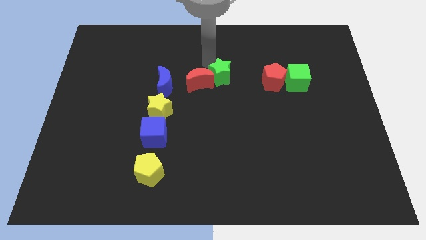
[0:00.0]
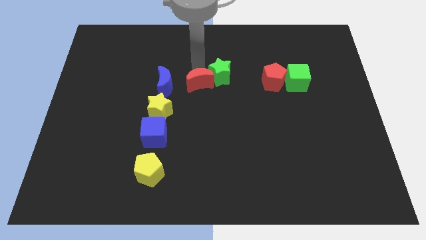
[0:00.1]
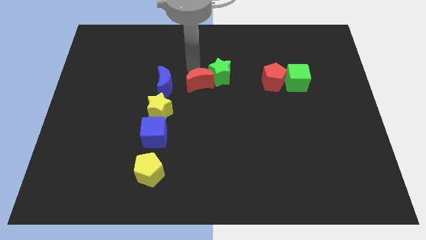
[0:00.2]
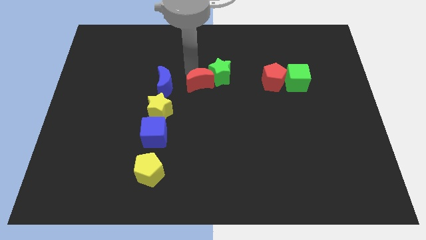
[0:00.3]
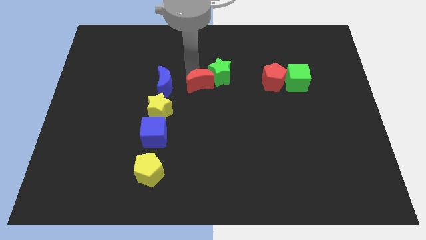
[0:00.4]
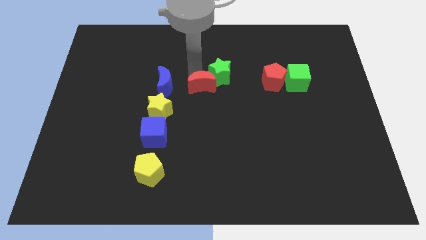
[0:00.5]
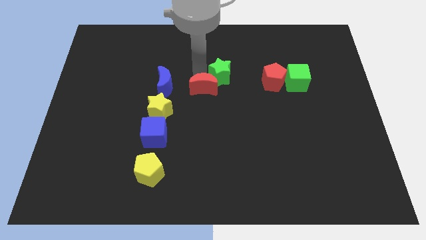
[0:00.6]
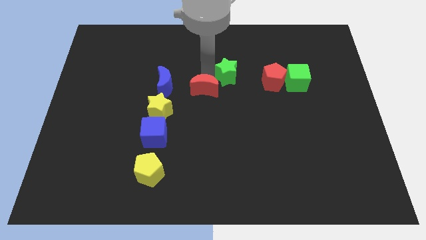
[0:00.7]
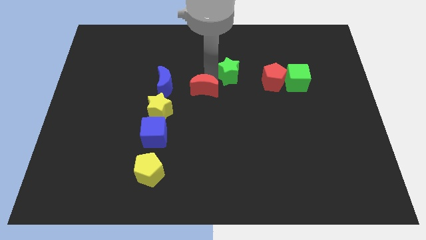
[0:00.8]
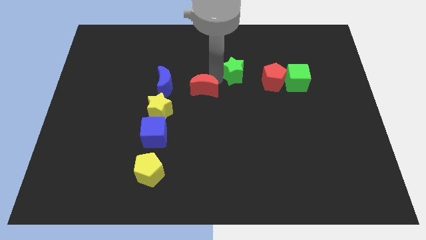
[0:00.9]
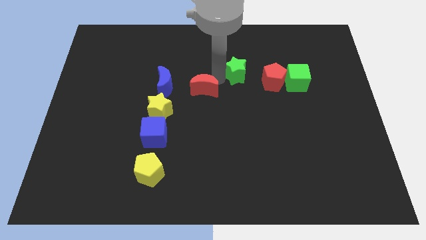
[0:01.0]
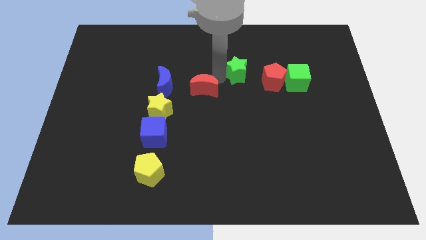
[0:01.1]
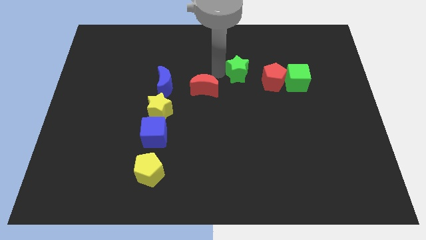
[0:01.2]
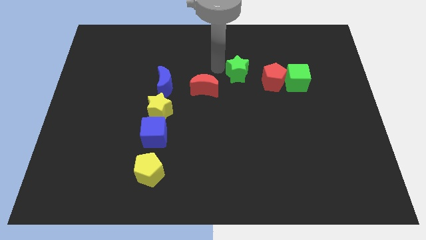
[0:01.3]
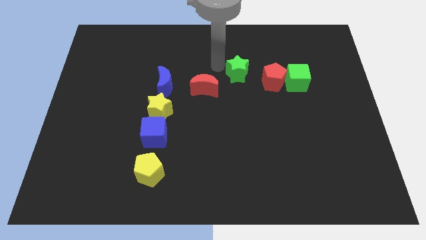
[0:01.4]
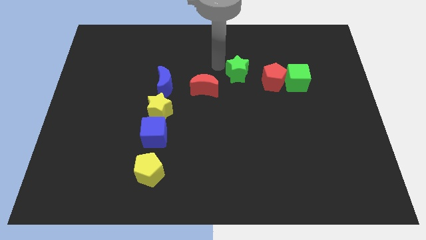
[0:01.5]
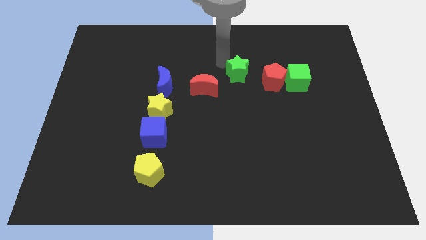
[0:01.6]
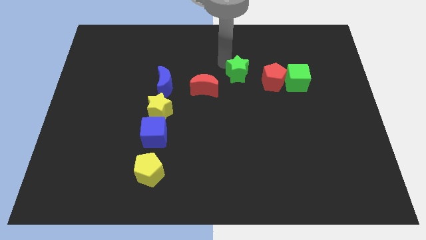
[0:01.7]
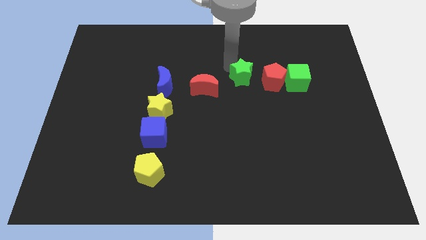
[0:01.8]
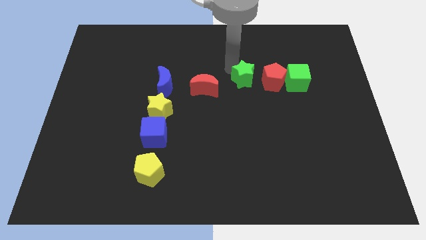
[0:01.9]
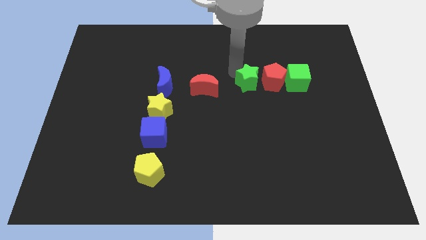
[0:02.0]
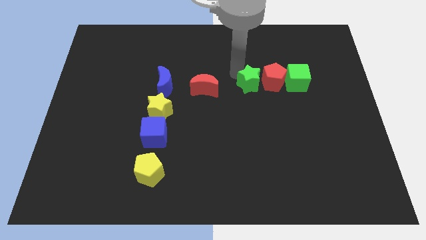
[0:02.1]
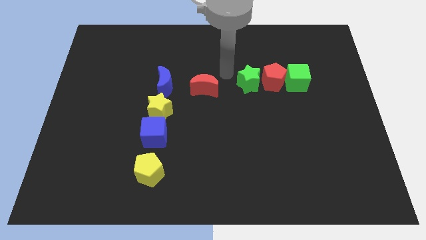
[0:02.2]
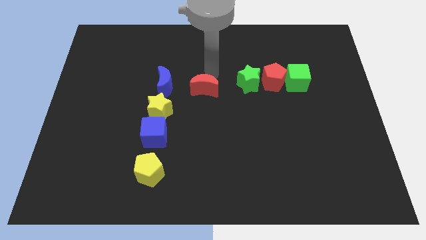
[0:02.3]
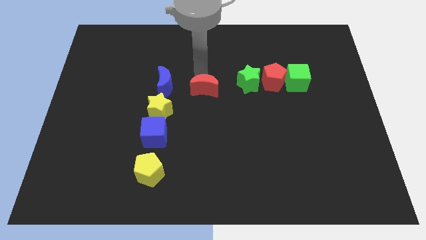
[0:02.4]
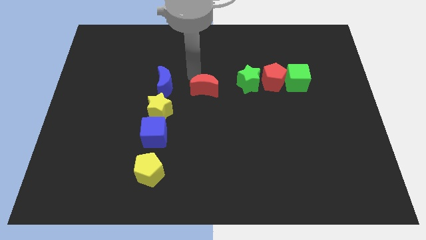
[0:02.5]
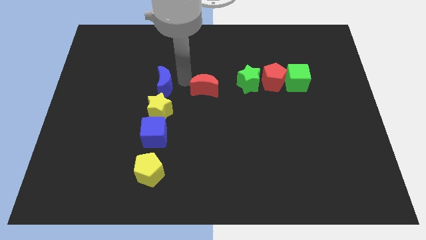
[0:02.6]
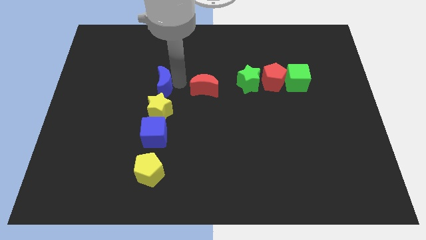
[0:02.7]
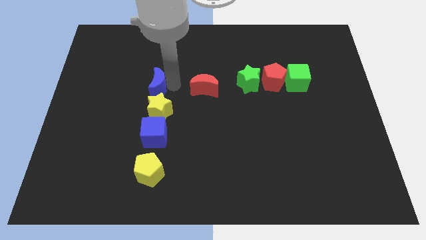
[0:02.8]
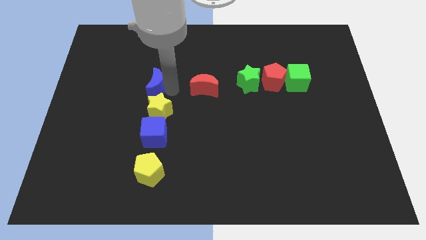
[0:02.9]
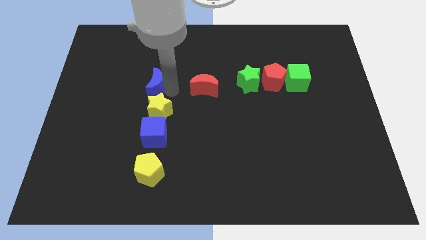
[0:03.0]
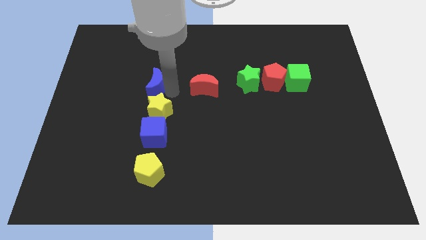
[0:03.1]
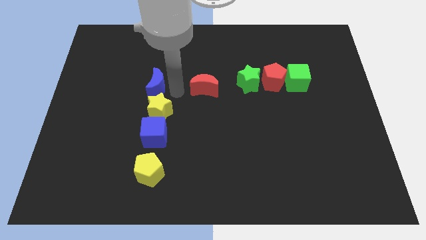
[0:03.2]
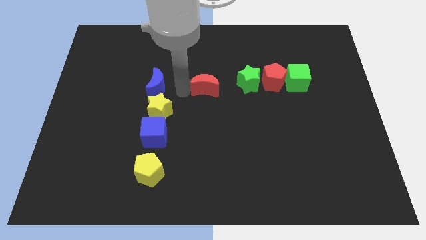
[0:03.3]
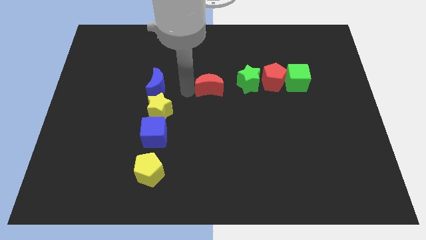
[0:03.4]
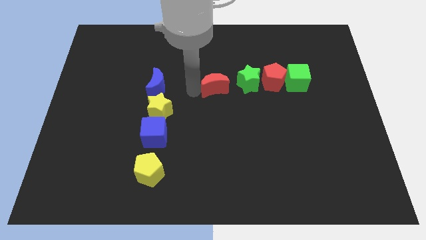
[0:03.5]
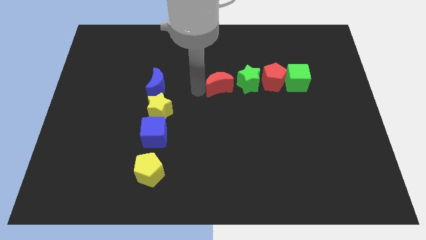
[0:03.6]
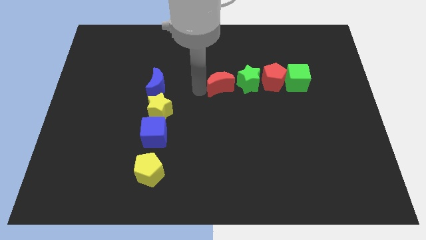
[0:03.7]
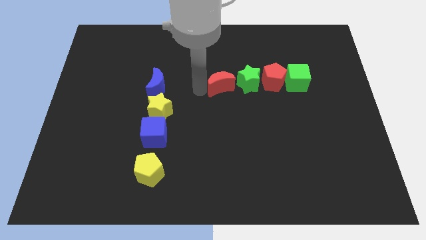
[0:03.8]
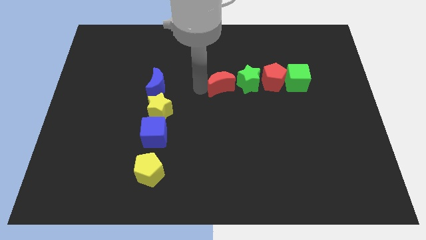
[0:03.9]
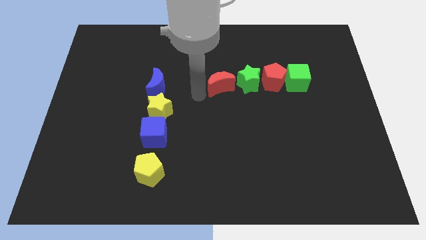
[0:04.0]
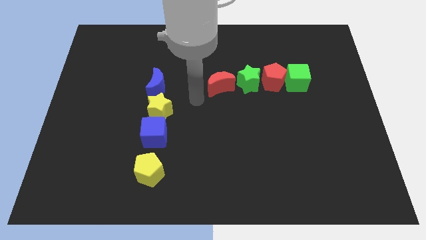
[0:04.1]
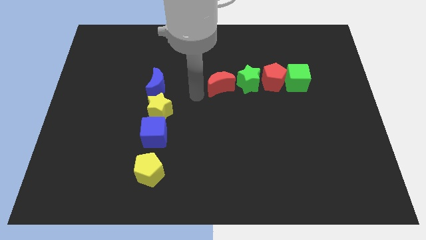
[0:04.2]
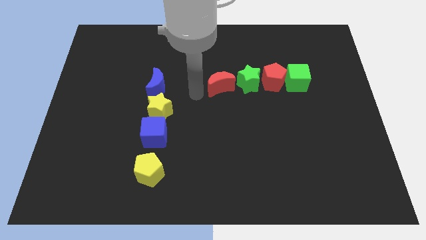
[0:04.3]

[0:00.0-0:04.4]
place green star in between red moon and red pentagon

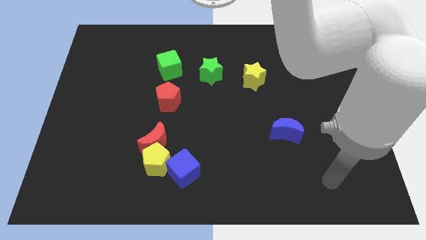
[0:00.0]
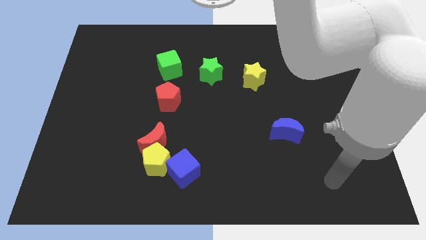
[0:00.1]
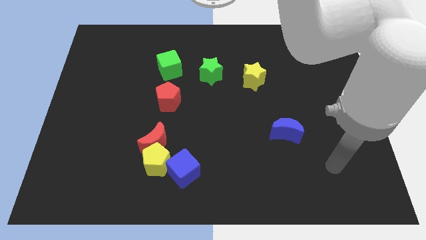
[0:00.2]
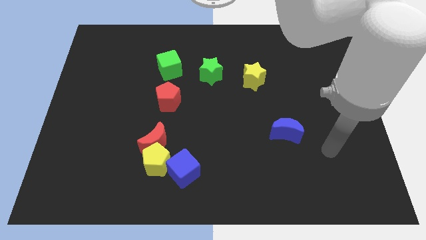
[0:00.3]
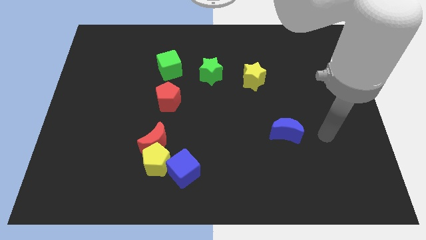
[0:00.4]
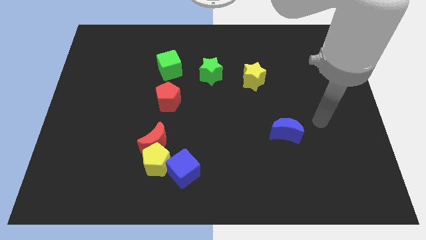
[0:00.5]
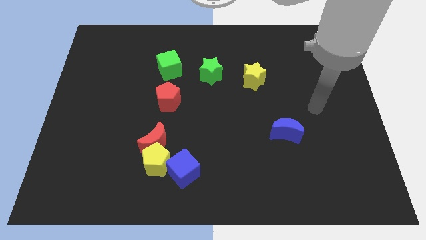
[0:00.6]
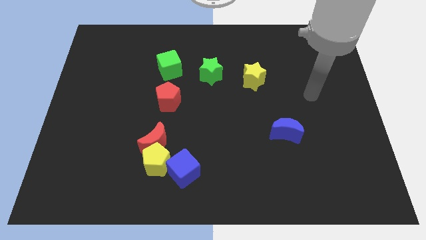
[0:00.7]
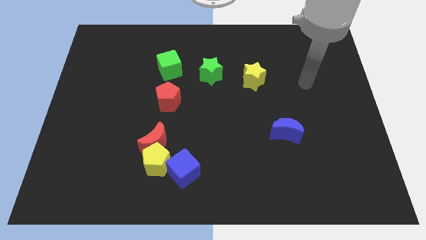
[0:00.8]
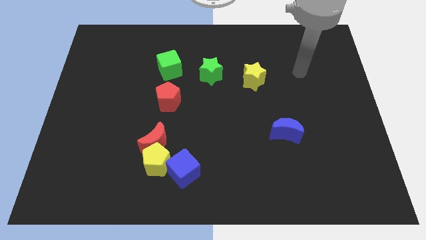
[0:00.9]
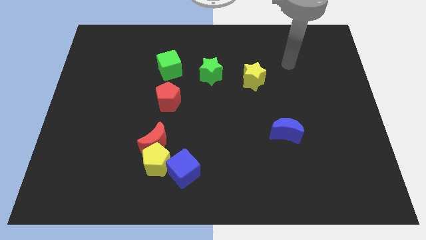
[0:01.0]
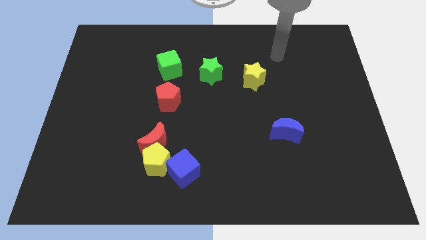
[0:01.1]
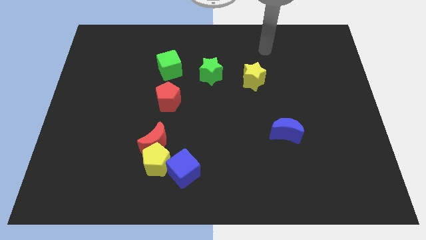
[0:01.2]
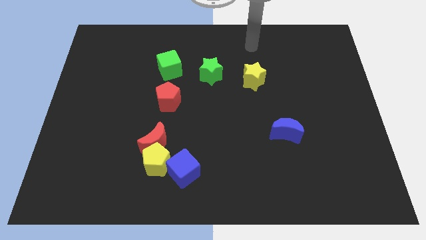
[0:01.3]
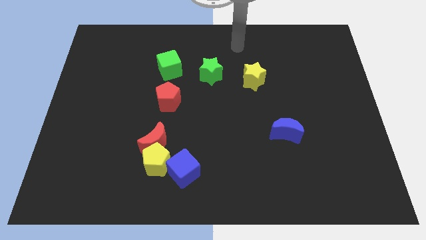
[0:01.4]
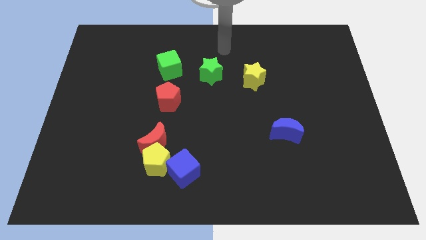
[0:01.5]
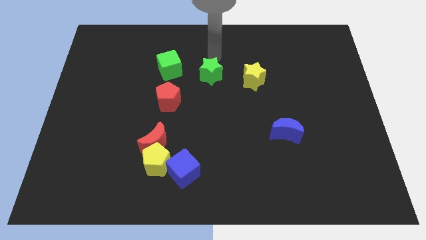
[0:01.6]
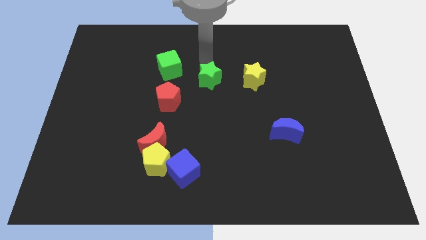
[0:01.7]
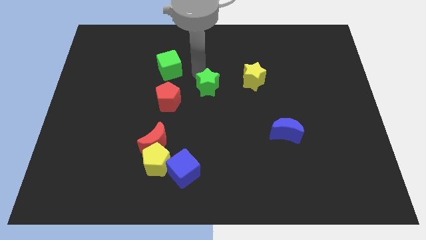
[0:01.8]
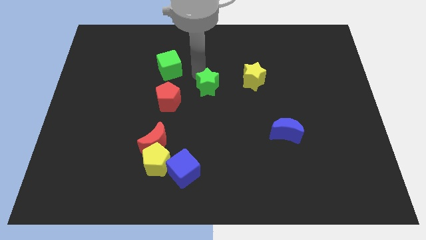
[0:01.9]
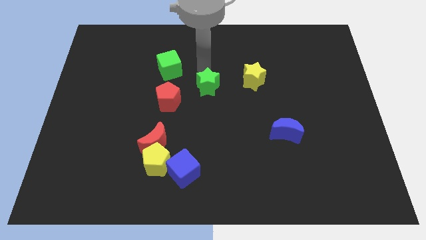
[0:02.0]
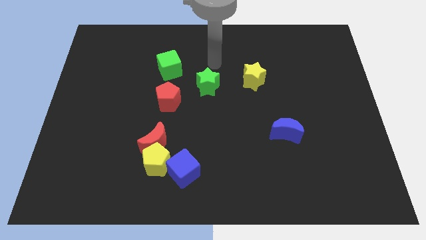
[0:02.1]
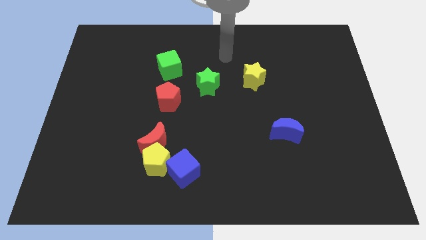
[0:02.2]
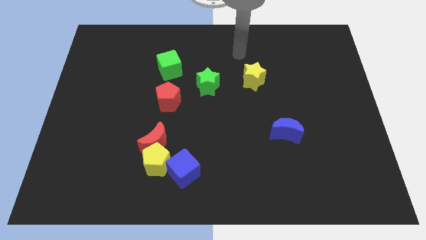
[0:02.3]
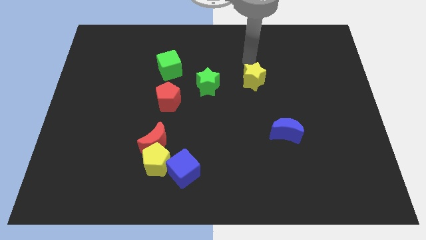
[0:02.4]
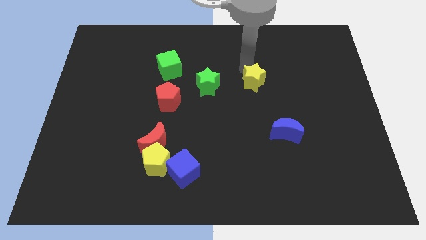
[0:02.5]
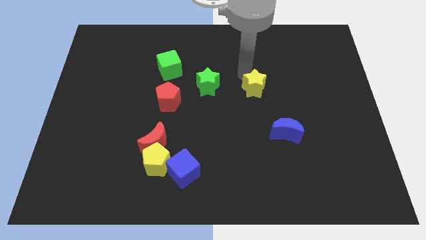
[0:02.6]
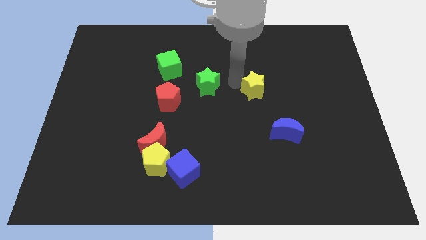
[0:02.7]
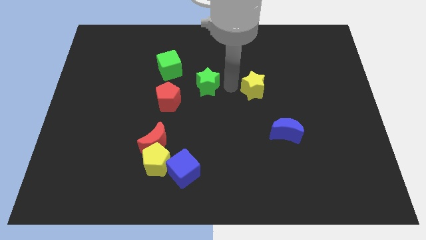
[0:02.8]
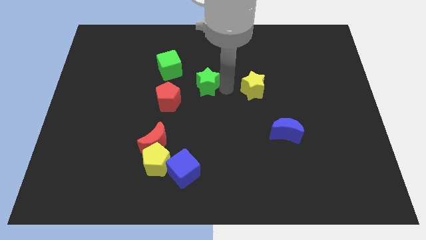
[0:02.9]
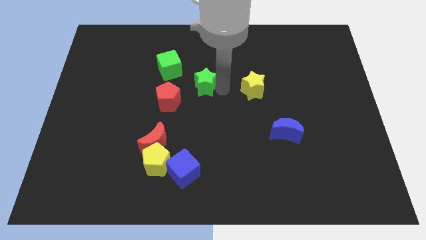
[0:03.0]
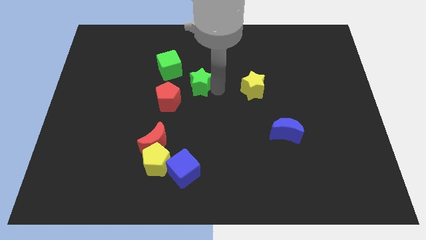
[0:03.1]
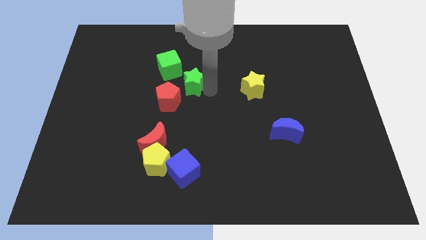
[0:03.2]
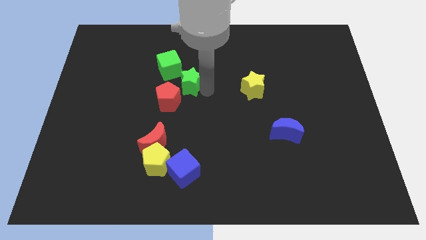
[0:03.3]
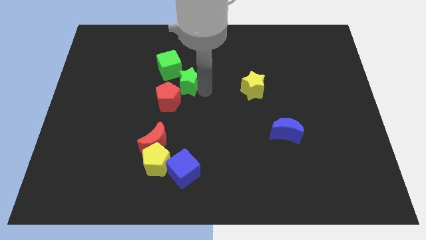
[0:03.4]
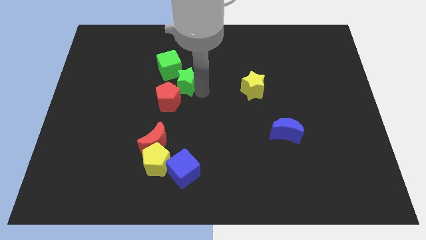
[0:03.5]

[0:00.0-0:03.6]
push the green star above the blue cube vertically

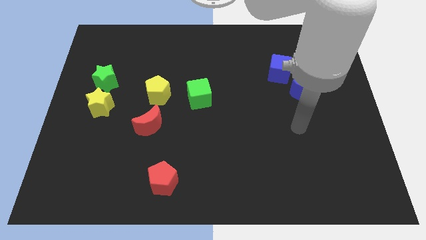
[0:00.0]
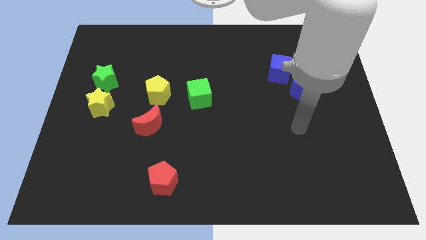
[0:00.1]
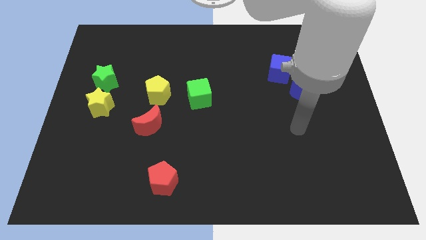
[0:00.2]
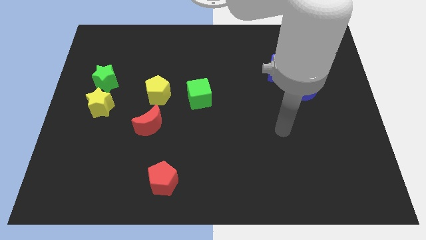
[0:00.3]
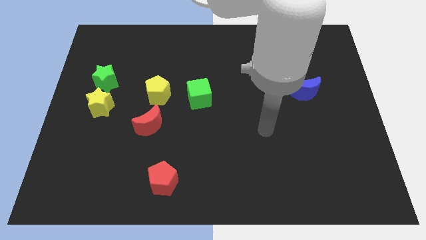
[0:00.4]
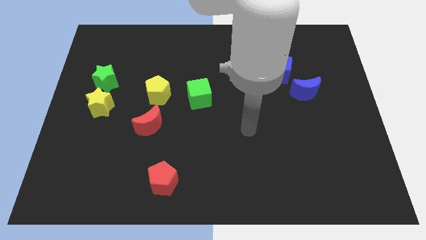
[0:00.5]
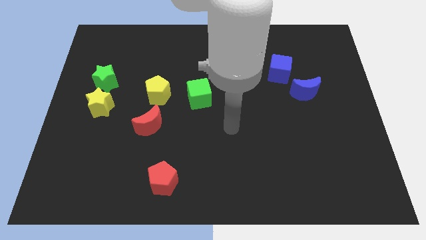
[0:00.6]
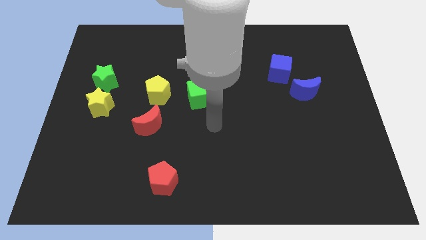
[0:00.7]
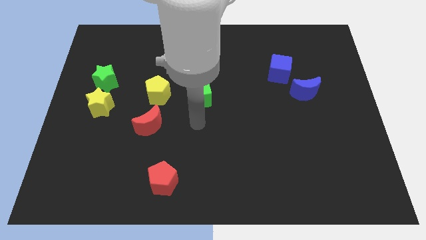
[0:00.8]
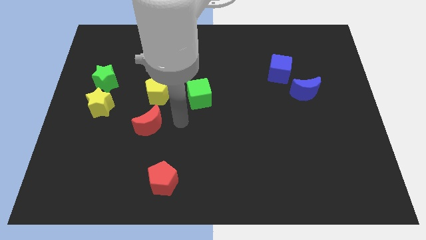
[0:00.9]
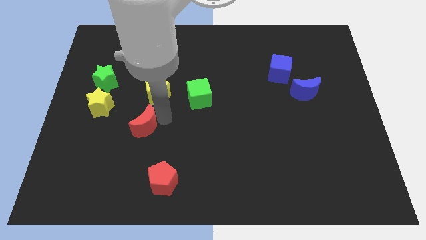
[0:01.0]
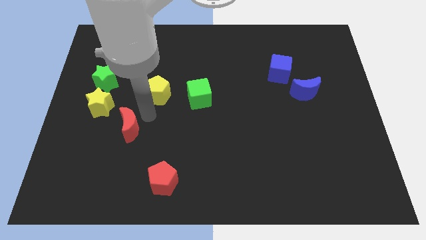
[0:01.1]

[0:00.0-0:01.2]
slide the red moon slightly to the left
